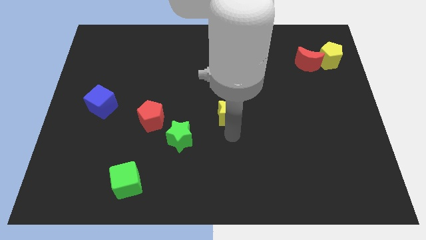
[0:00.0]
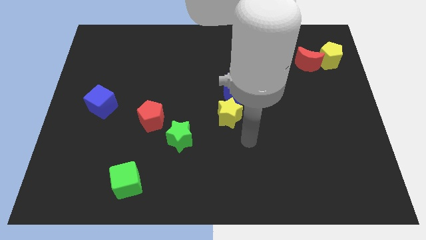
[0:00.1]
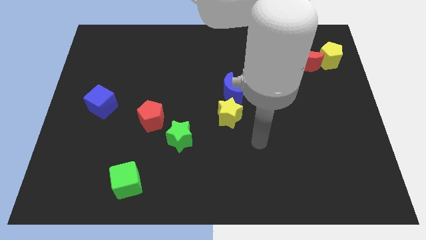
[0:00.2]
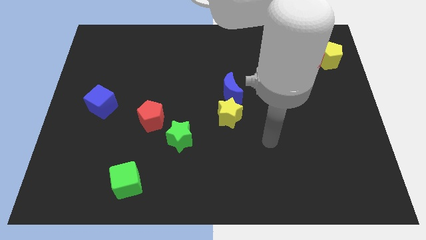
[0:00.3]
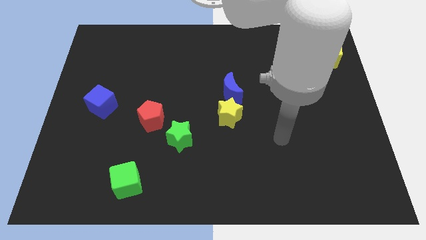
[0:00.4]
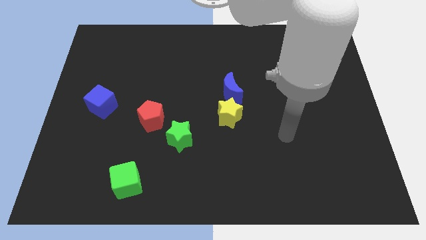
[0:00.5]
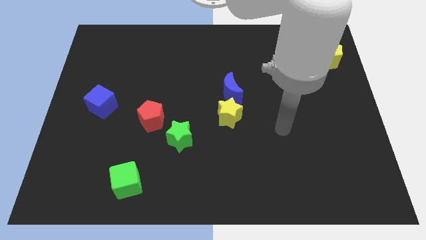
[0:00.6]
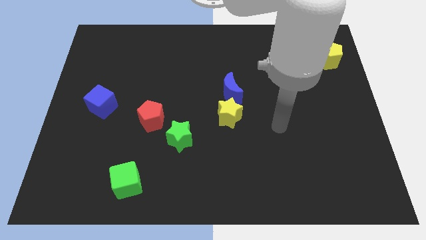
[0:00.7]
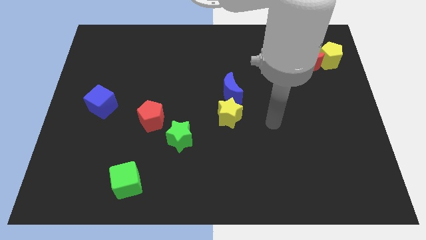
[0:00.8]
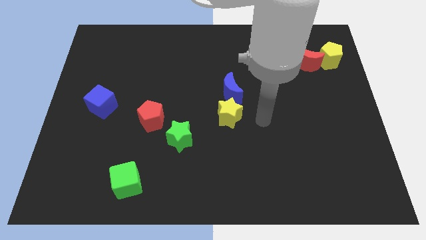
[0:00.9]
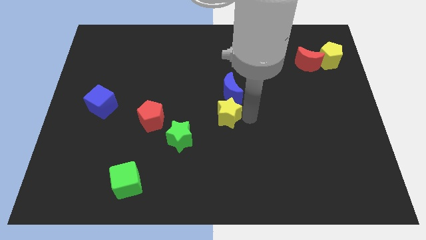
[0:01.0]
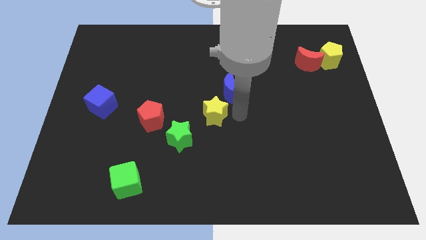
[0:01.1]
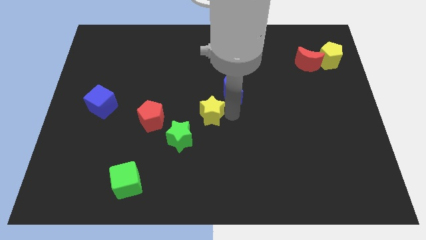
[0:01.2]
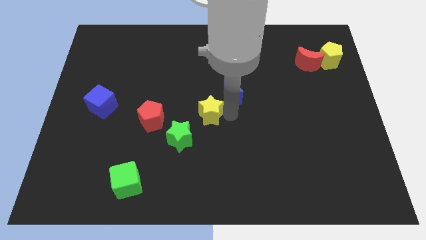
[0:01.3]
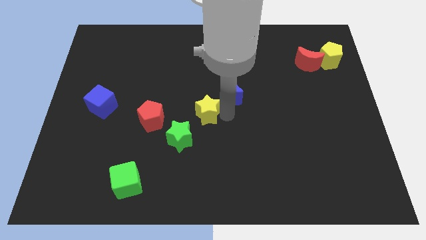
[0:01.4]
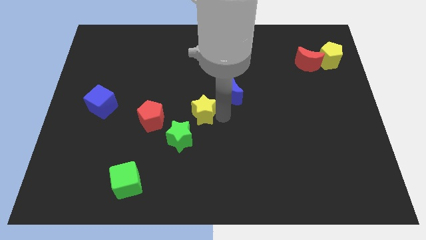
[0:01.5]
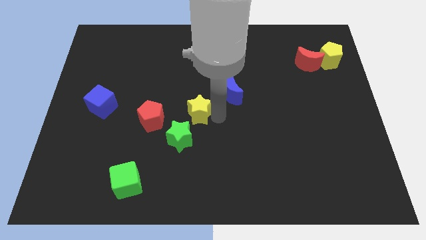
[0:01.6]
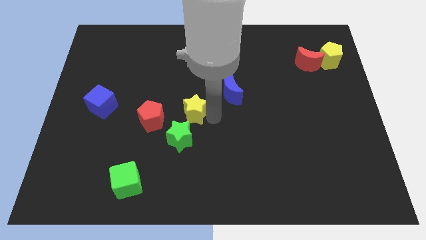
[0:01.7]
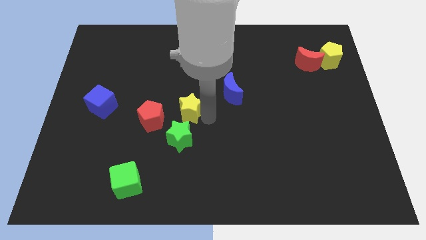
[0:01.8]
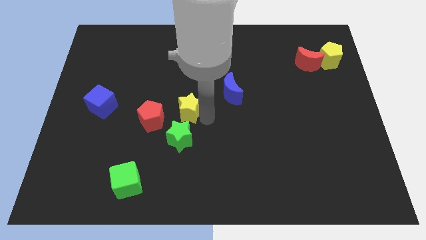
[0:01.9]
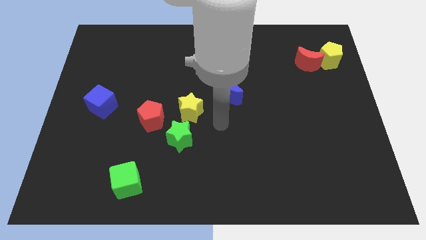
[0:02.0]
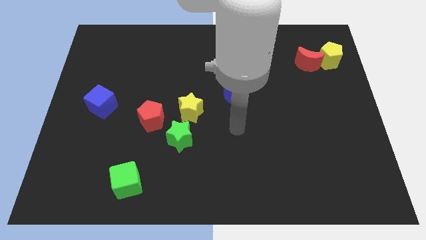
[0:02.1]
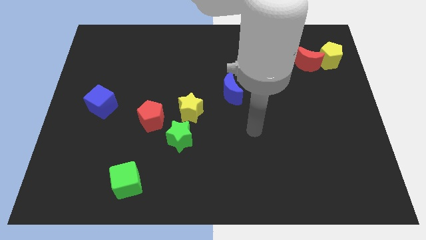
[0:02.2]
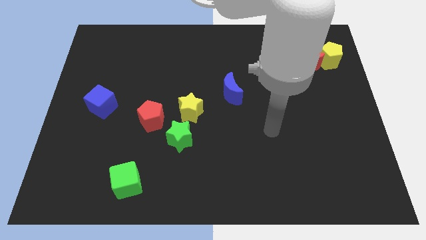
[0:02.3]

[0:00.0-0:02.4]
push the yellow star to the top of the green star

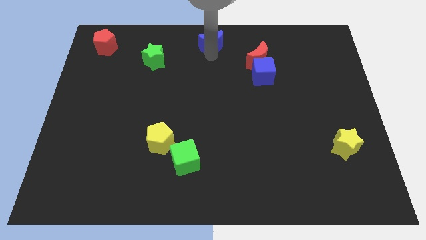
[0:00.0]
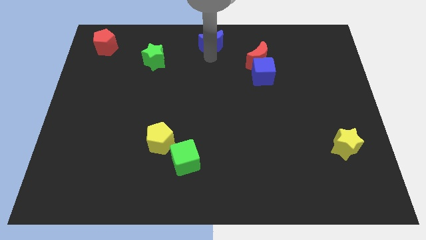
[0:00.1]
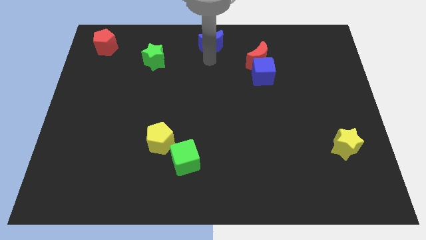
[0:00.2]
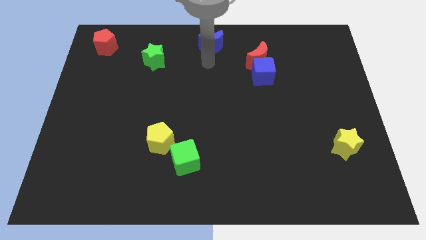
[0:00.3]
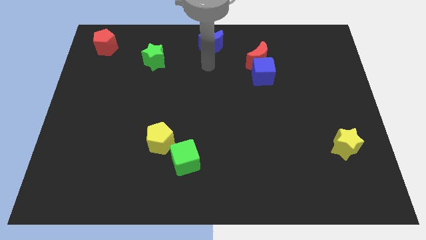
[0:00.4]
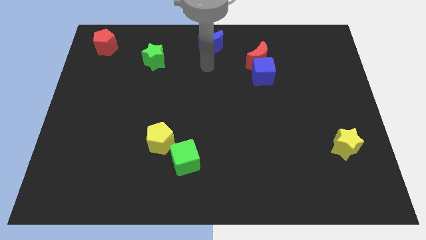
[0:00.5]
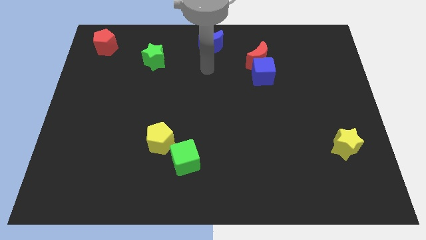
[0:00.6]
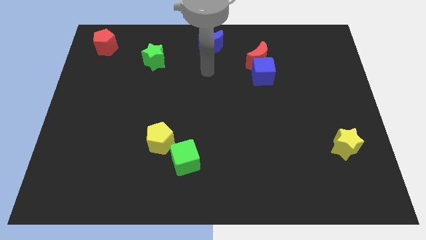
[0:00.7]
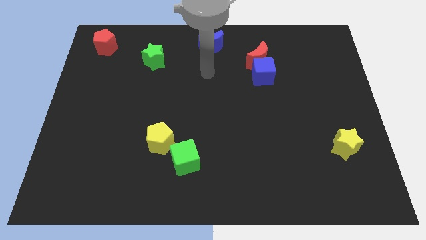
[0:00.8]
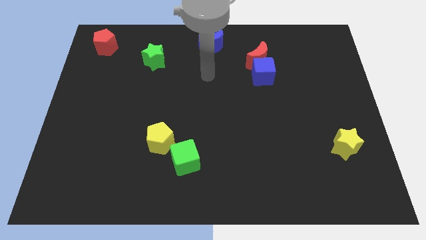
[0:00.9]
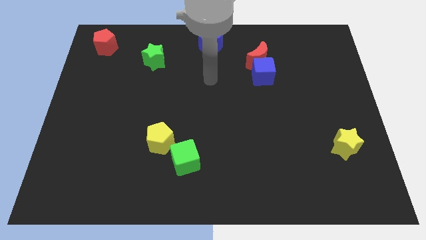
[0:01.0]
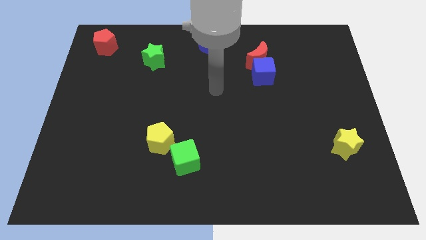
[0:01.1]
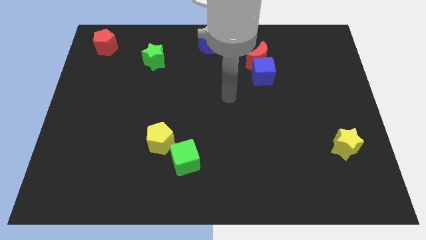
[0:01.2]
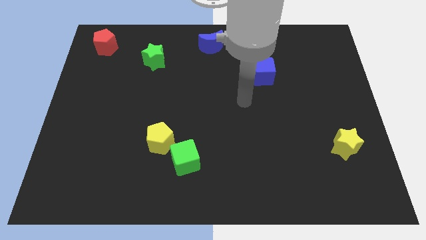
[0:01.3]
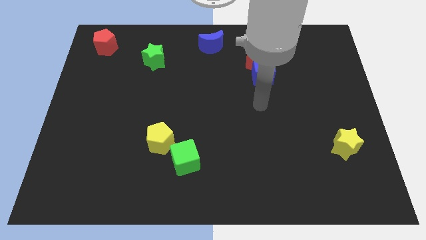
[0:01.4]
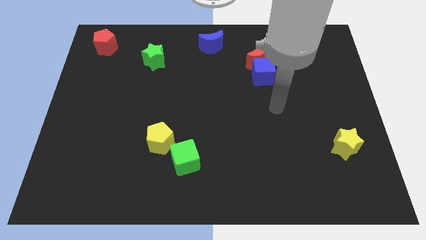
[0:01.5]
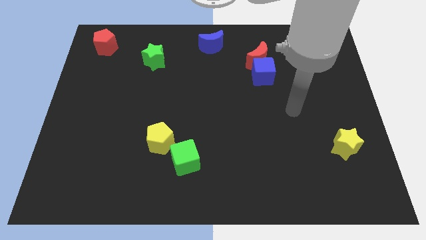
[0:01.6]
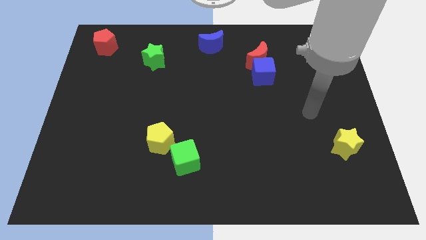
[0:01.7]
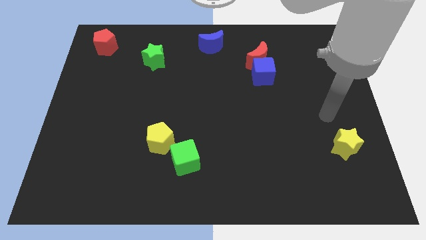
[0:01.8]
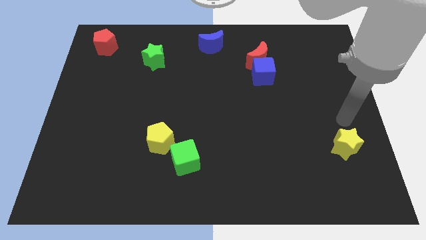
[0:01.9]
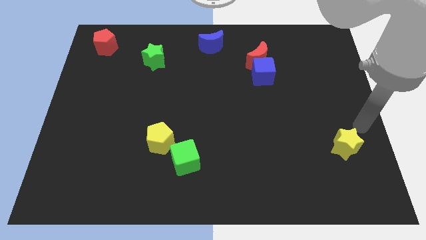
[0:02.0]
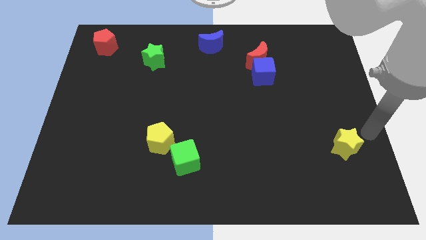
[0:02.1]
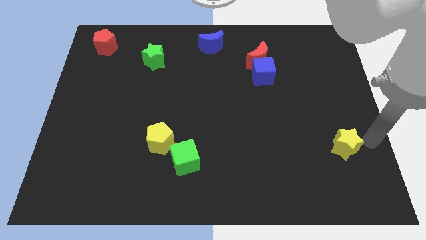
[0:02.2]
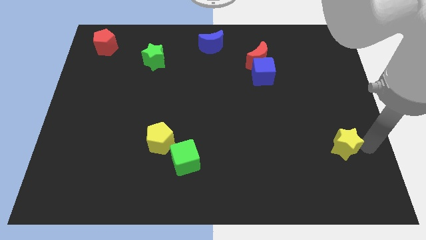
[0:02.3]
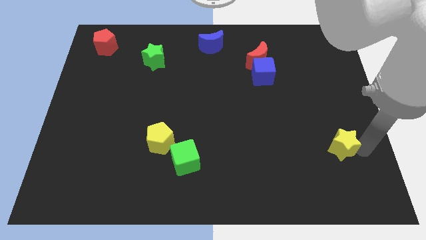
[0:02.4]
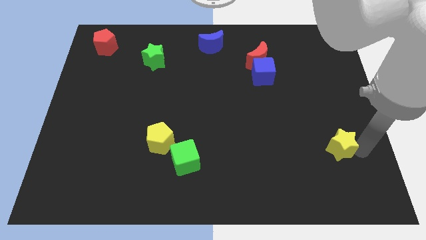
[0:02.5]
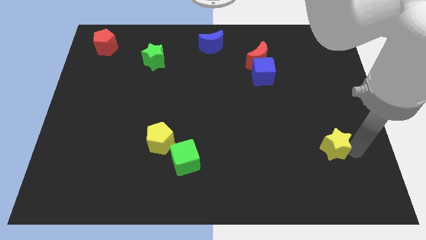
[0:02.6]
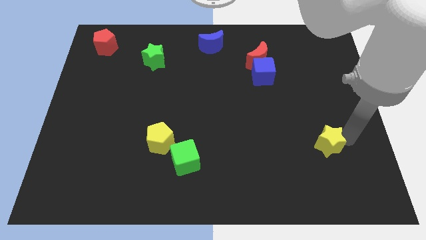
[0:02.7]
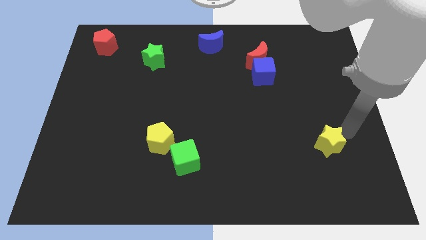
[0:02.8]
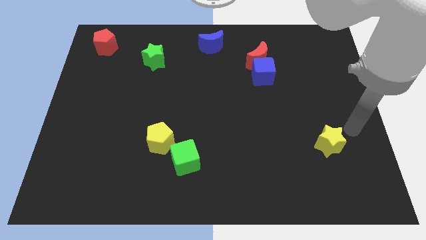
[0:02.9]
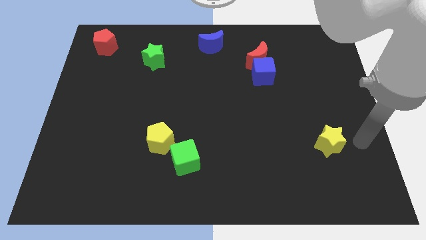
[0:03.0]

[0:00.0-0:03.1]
push the yellow star slightly to the left

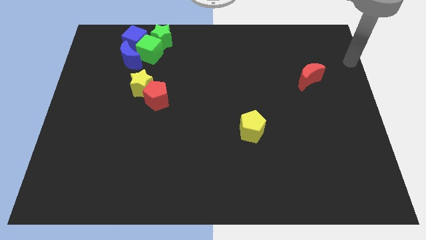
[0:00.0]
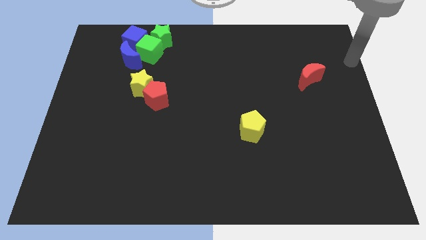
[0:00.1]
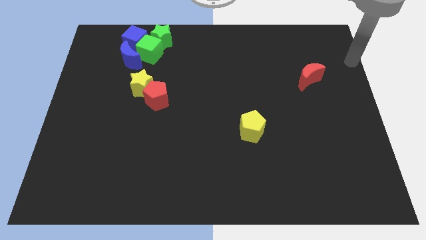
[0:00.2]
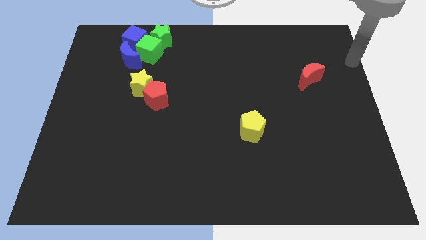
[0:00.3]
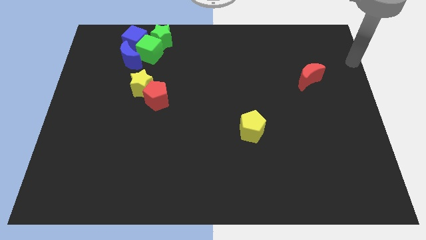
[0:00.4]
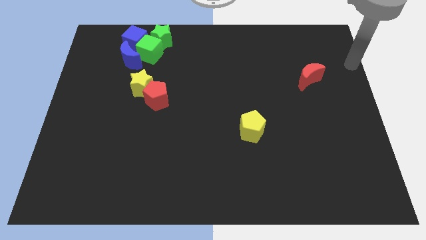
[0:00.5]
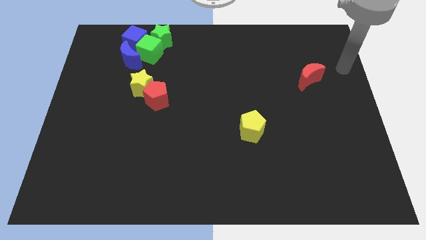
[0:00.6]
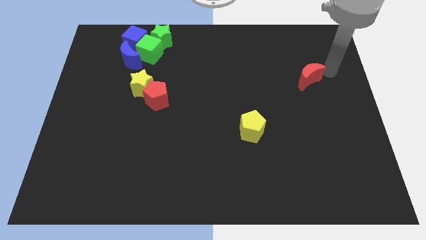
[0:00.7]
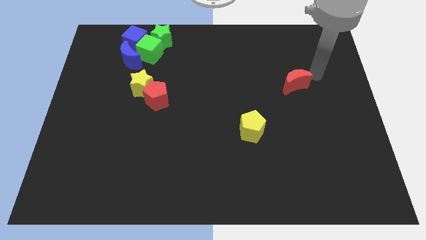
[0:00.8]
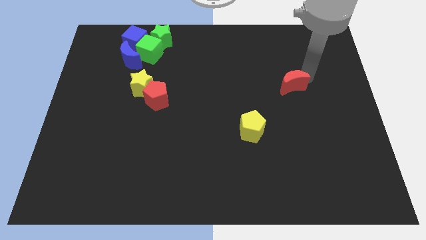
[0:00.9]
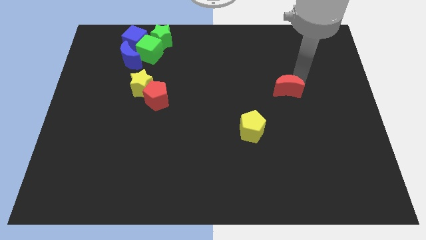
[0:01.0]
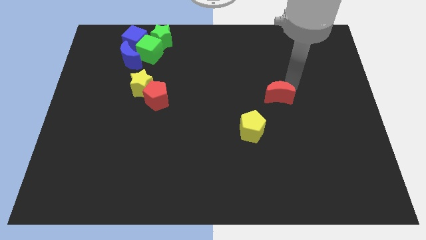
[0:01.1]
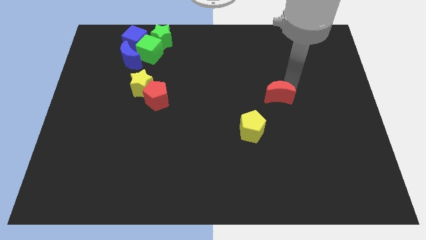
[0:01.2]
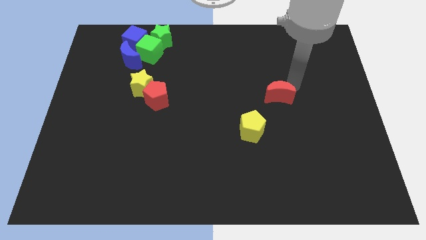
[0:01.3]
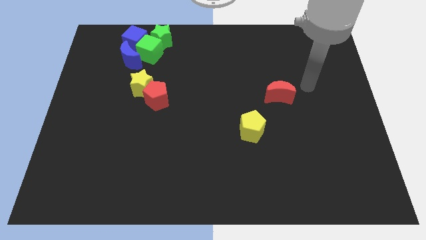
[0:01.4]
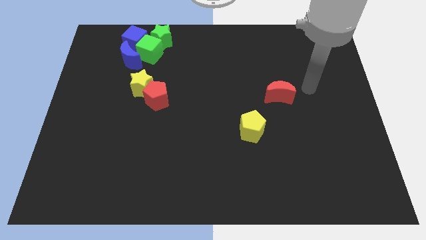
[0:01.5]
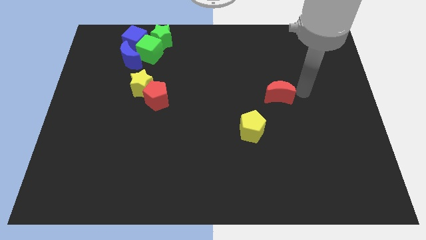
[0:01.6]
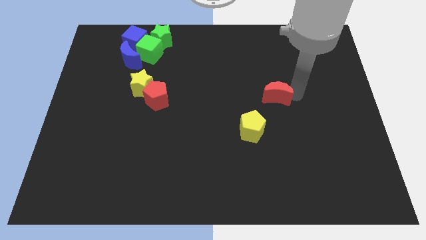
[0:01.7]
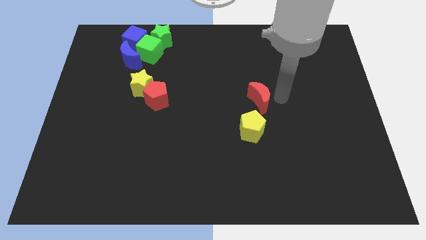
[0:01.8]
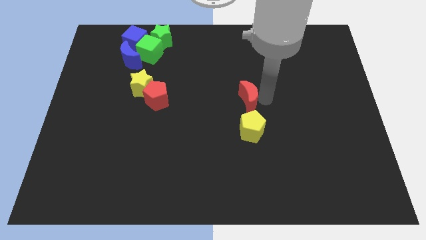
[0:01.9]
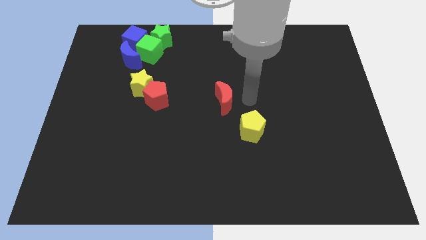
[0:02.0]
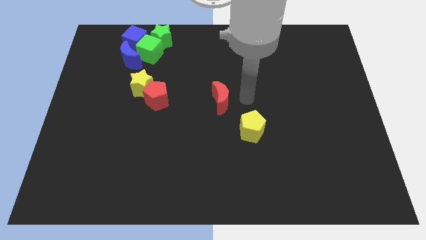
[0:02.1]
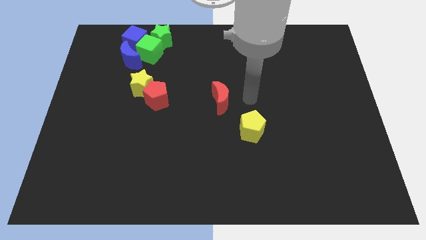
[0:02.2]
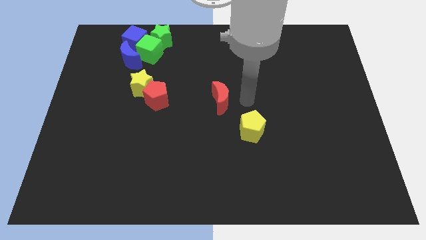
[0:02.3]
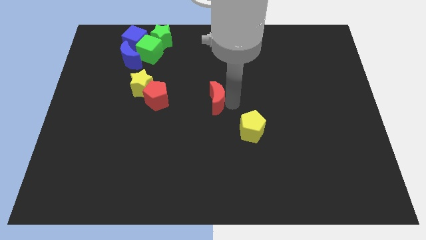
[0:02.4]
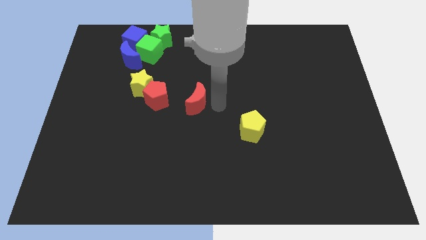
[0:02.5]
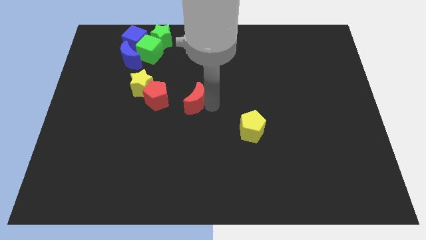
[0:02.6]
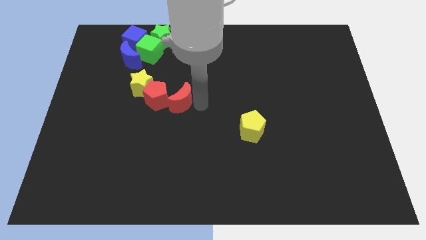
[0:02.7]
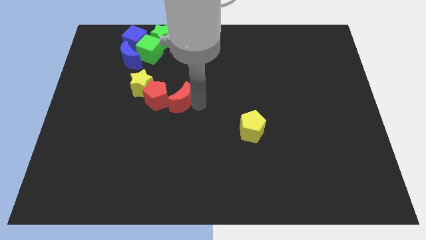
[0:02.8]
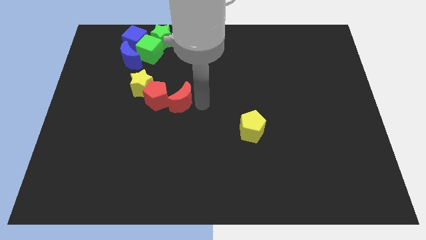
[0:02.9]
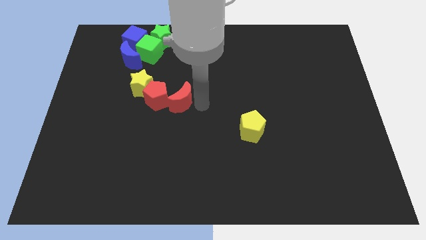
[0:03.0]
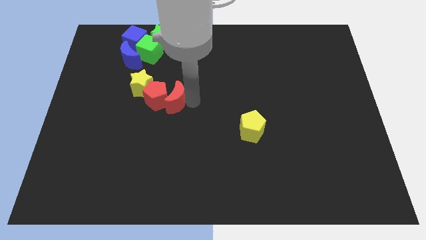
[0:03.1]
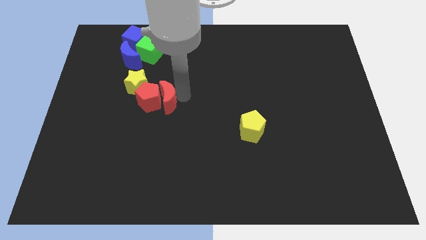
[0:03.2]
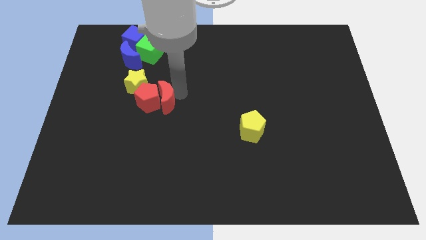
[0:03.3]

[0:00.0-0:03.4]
push the red crescent into red pentagon
